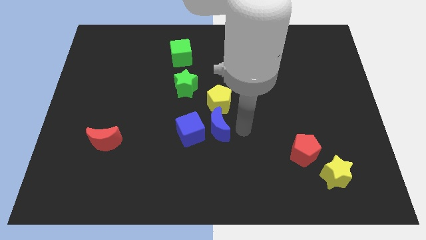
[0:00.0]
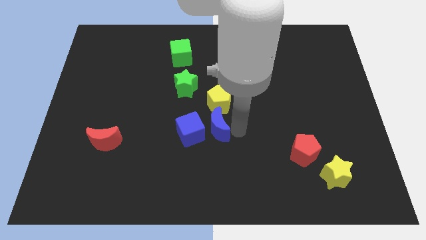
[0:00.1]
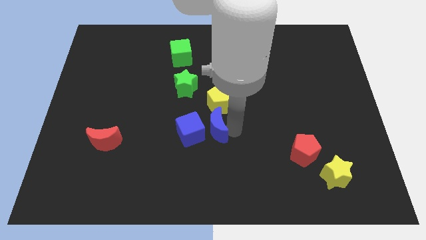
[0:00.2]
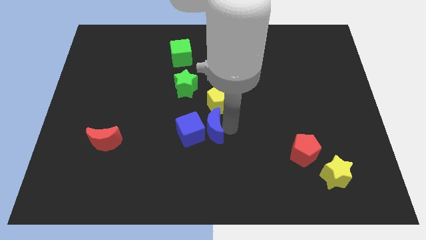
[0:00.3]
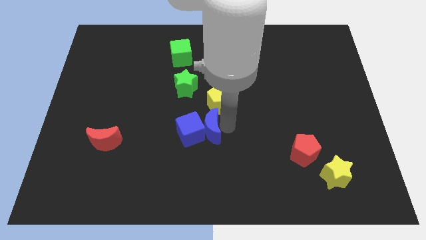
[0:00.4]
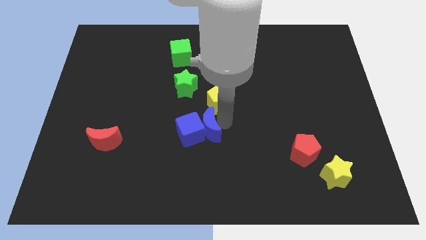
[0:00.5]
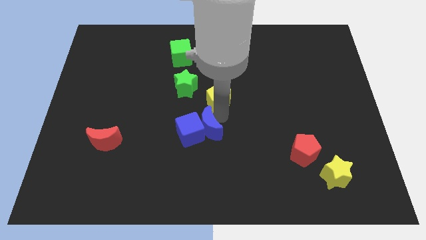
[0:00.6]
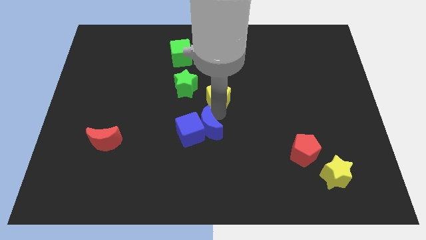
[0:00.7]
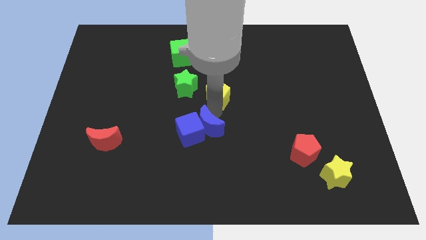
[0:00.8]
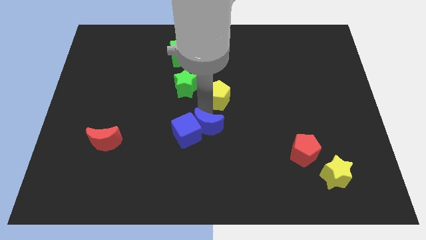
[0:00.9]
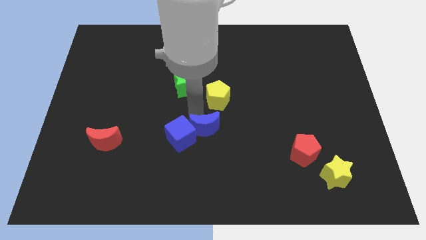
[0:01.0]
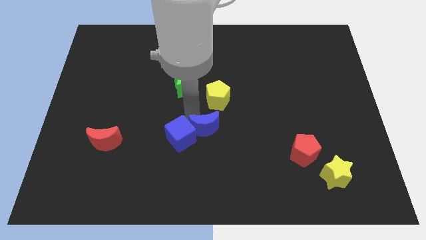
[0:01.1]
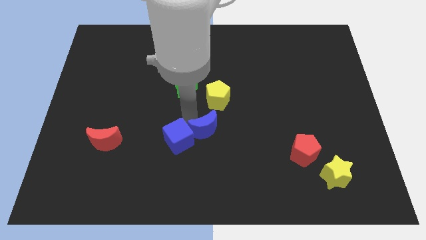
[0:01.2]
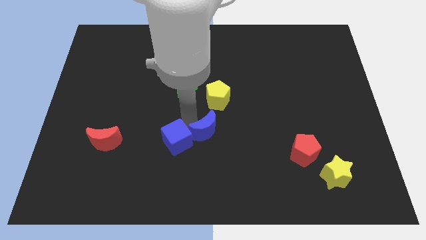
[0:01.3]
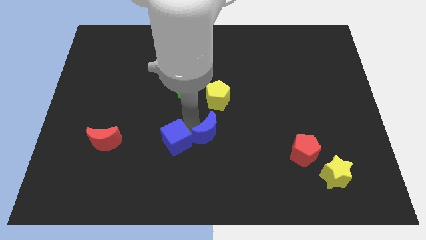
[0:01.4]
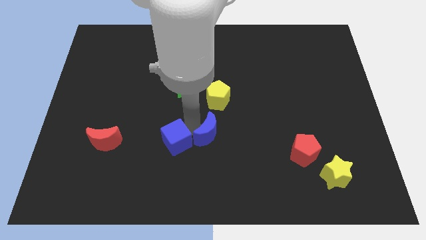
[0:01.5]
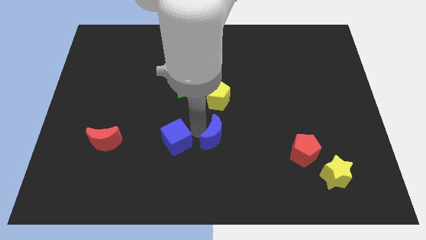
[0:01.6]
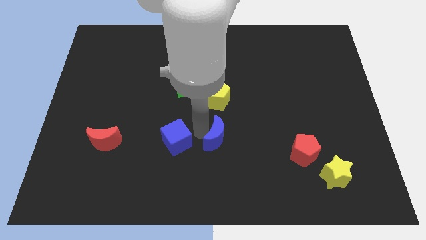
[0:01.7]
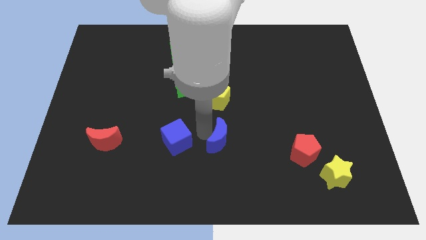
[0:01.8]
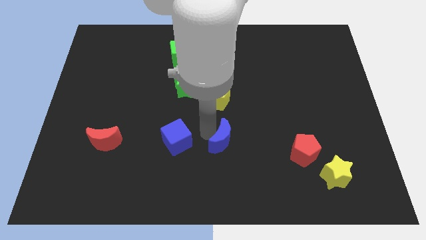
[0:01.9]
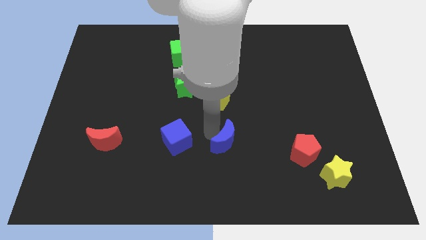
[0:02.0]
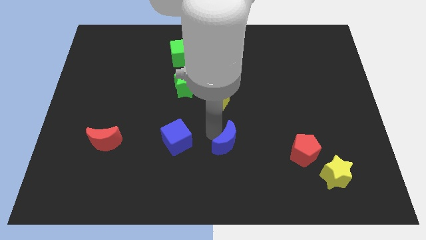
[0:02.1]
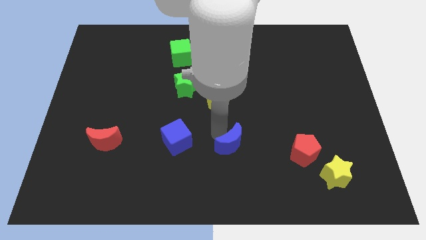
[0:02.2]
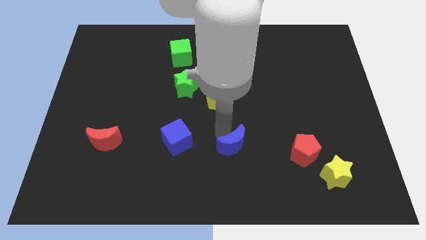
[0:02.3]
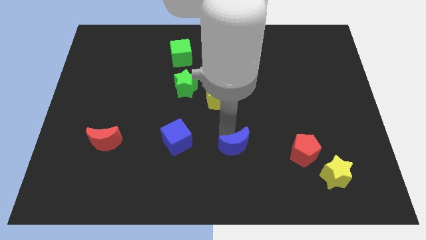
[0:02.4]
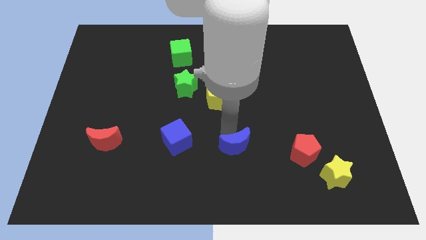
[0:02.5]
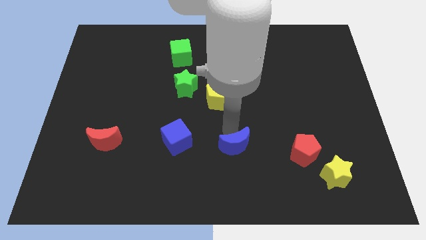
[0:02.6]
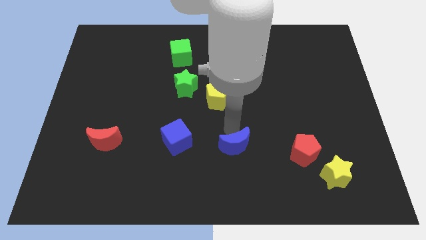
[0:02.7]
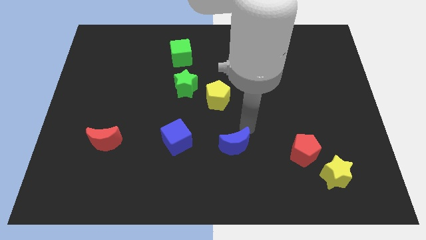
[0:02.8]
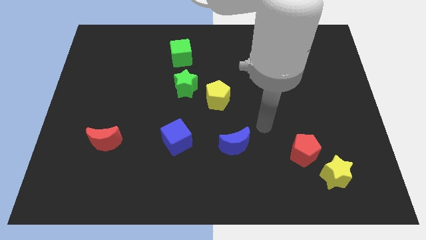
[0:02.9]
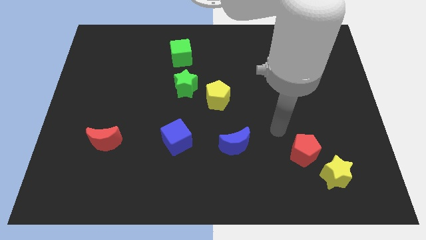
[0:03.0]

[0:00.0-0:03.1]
place the blue crescent in between the blue cube and the red pentagon

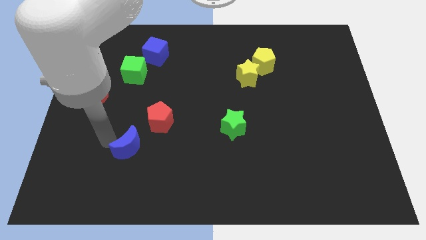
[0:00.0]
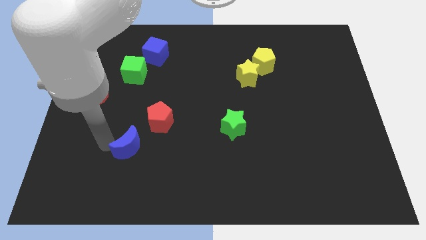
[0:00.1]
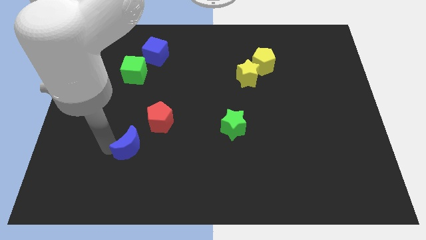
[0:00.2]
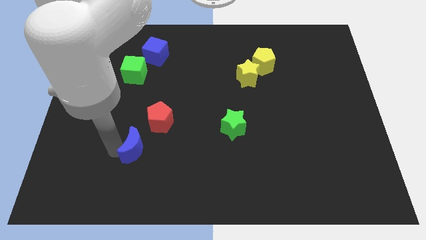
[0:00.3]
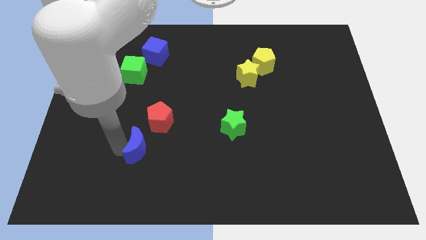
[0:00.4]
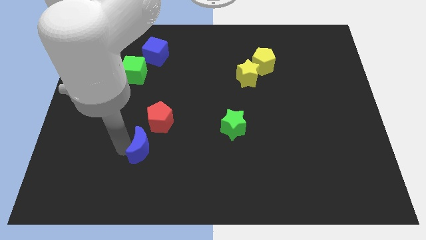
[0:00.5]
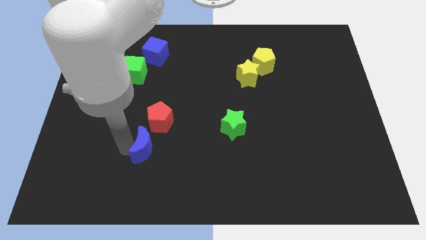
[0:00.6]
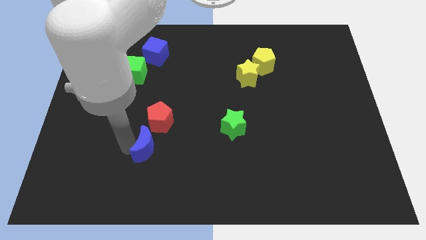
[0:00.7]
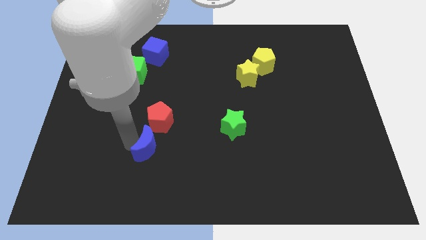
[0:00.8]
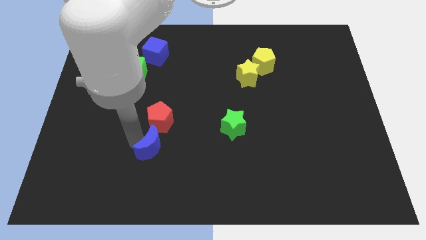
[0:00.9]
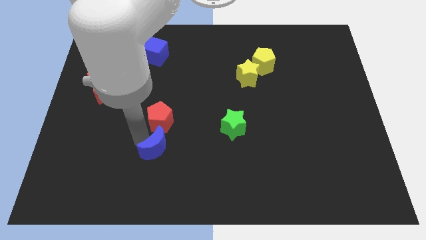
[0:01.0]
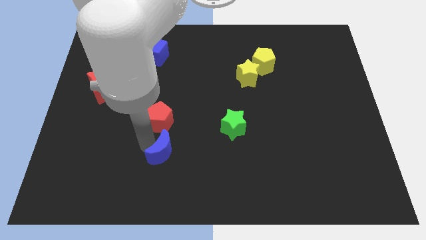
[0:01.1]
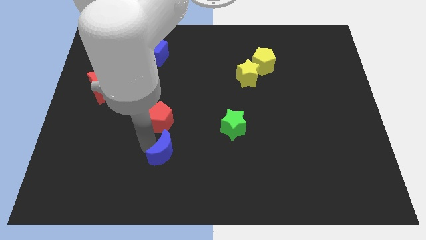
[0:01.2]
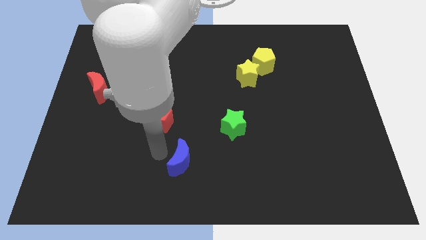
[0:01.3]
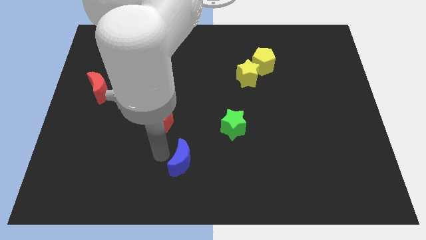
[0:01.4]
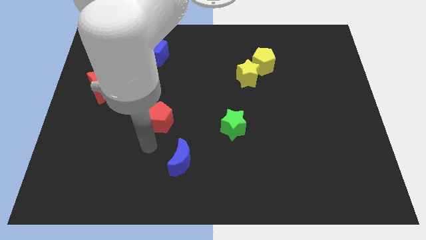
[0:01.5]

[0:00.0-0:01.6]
move the blue crescent to the bottom right of the red pentagon

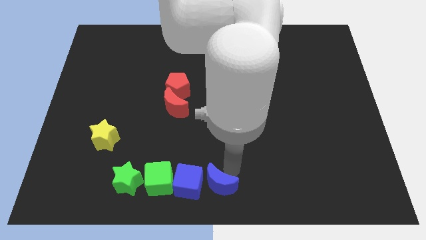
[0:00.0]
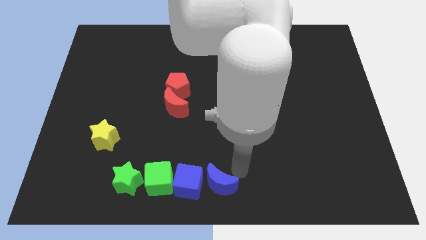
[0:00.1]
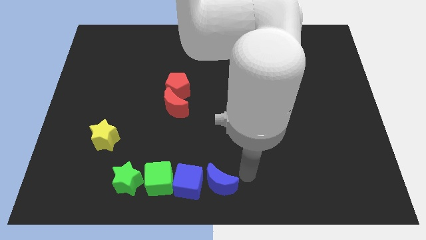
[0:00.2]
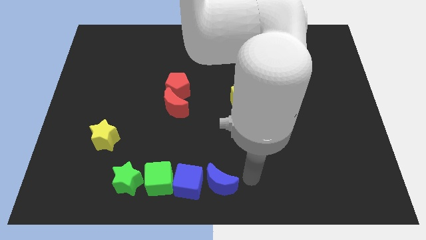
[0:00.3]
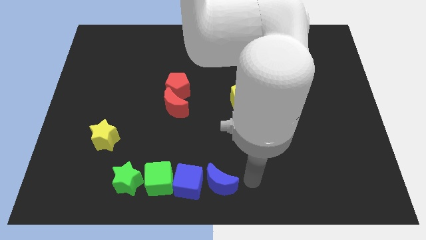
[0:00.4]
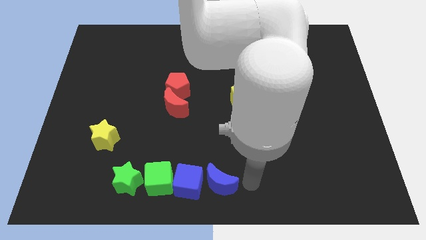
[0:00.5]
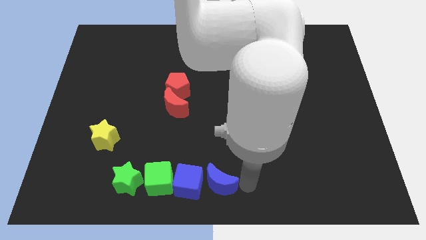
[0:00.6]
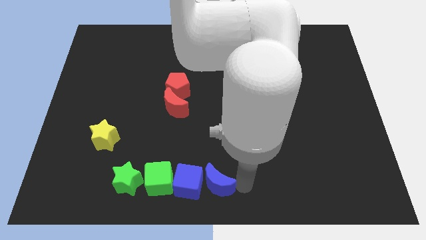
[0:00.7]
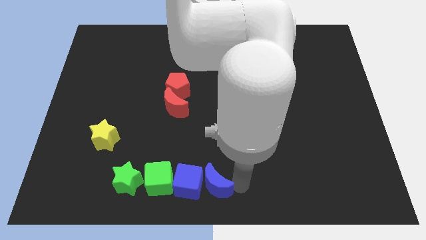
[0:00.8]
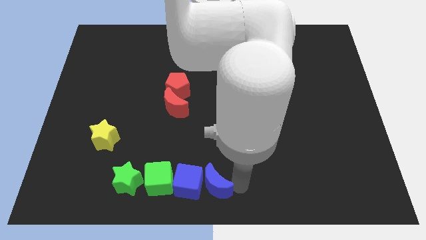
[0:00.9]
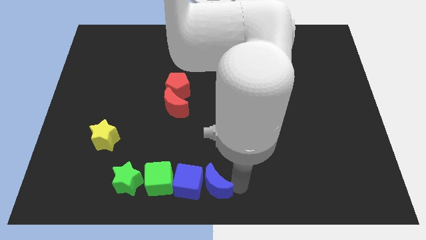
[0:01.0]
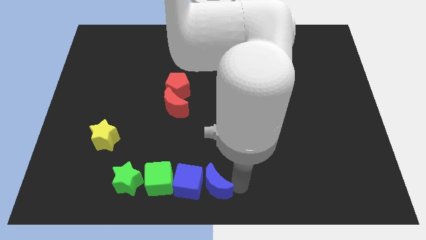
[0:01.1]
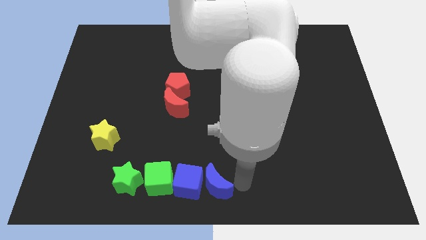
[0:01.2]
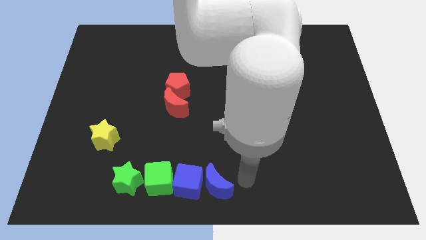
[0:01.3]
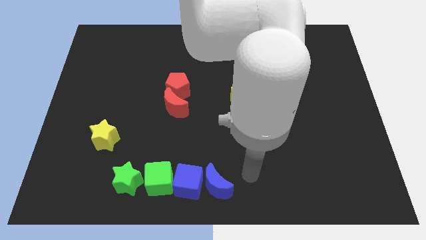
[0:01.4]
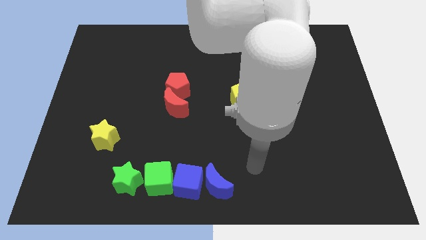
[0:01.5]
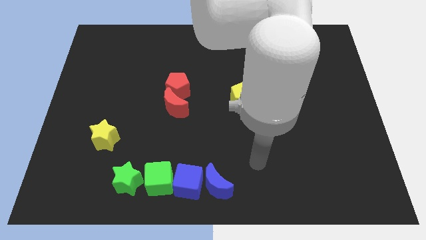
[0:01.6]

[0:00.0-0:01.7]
adjust the blue moon

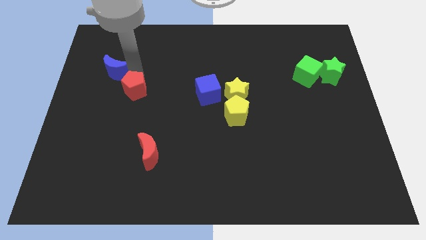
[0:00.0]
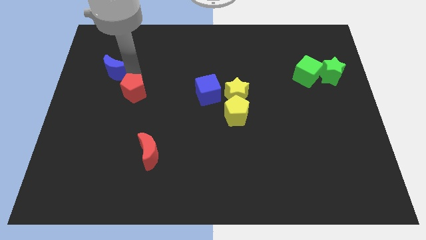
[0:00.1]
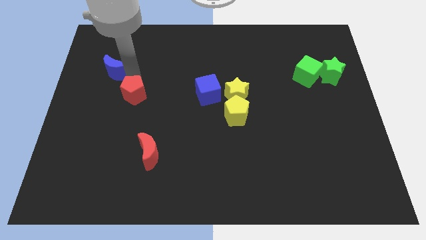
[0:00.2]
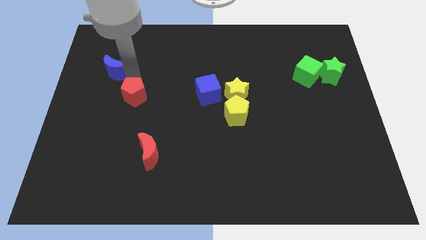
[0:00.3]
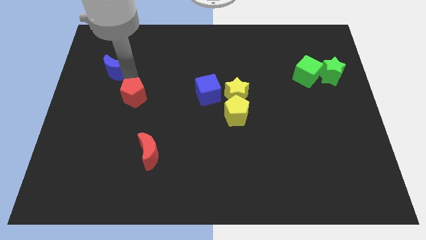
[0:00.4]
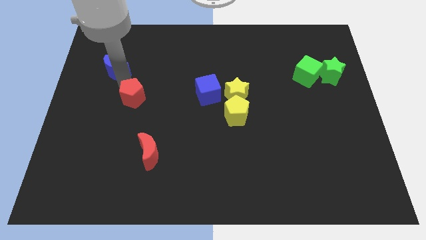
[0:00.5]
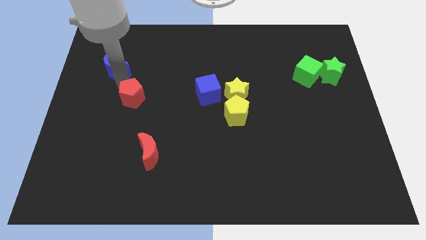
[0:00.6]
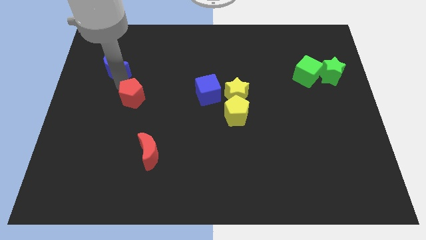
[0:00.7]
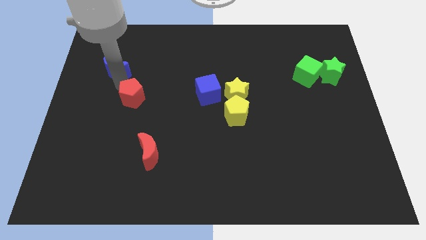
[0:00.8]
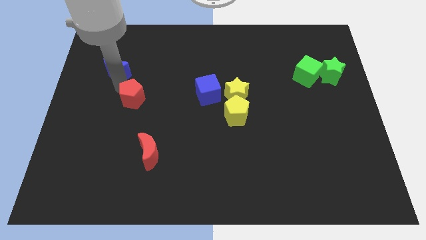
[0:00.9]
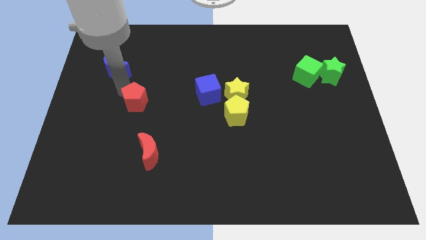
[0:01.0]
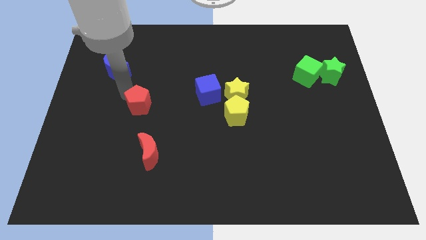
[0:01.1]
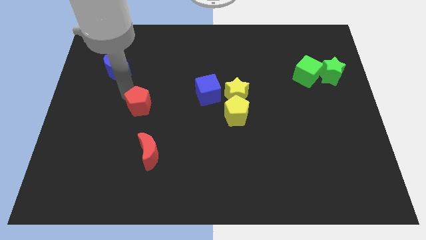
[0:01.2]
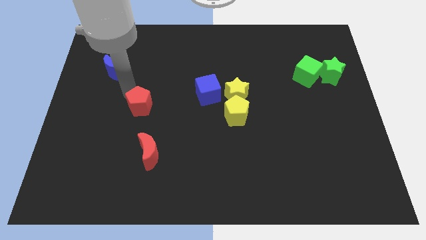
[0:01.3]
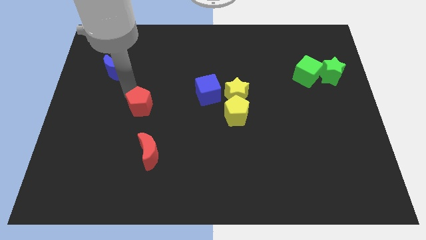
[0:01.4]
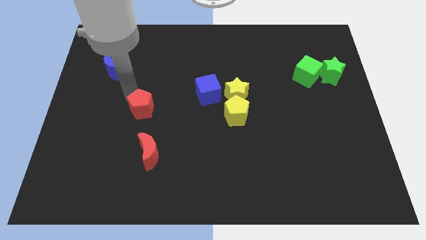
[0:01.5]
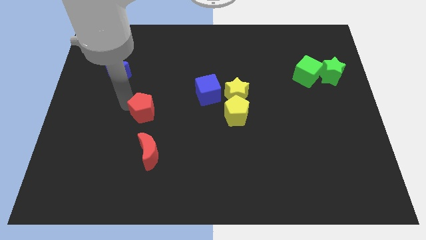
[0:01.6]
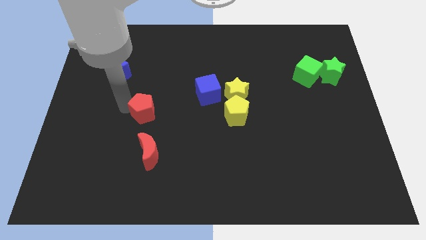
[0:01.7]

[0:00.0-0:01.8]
push the red pentagon towards the red moon

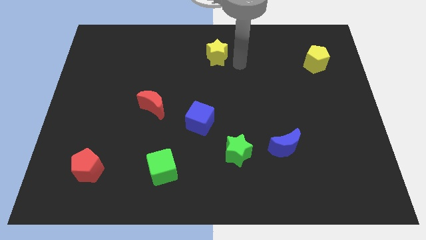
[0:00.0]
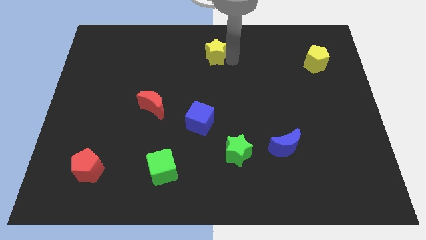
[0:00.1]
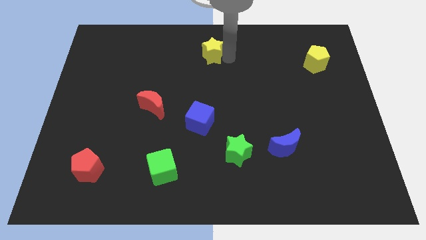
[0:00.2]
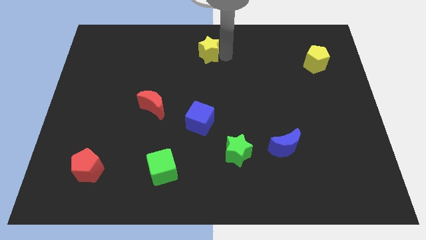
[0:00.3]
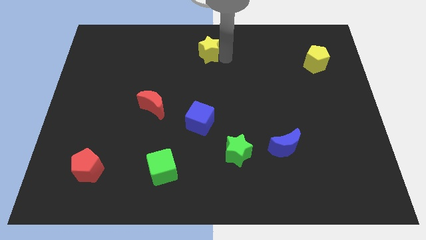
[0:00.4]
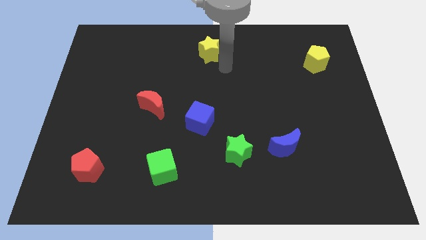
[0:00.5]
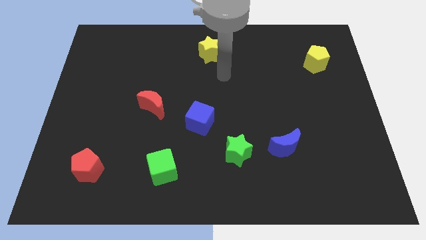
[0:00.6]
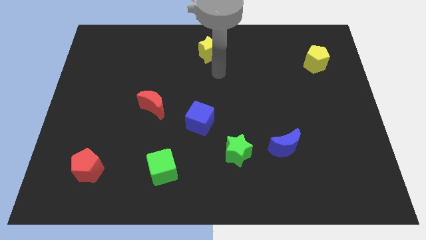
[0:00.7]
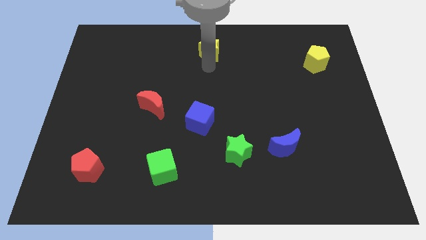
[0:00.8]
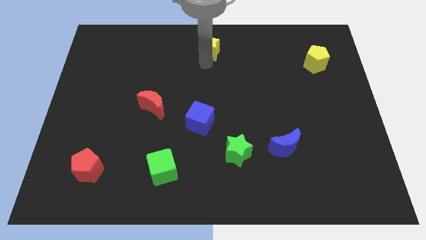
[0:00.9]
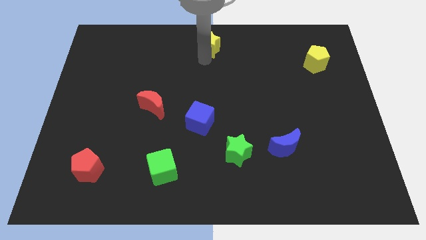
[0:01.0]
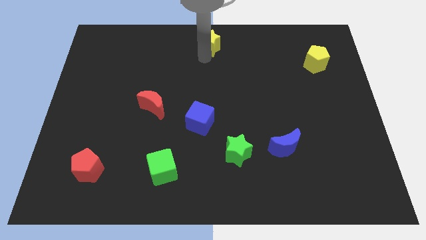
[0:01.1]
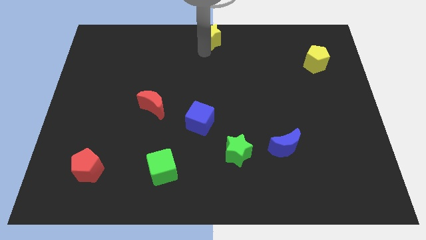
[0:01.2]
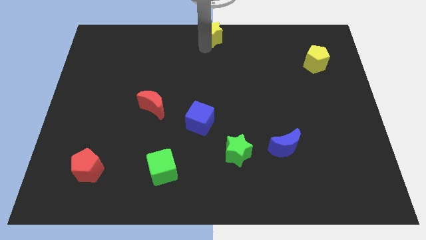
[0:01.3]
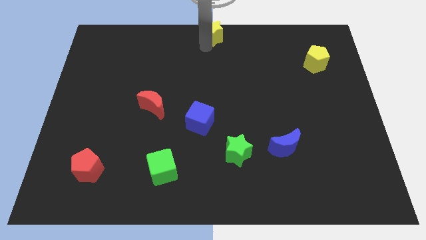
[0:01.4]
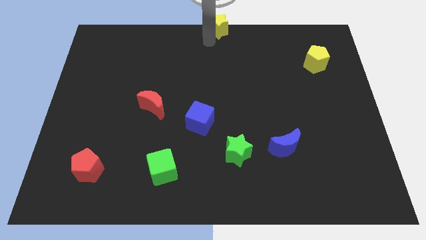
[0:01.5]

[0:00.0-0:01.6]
place the yellow star at the top center
